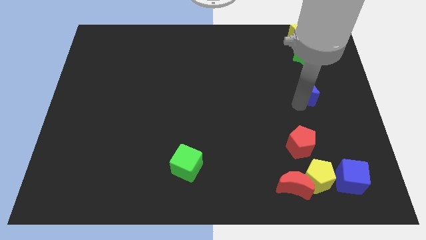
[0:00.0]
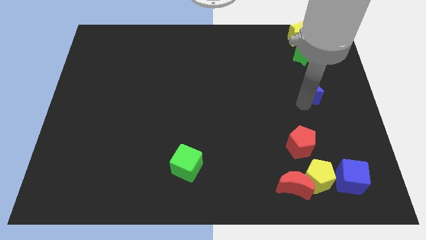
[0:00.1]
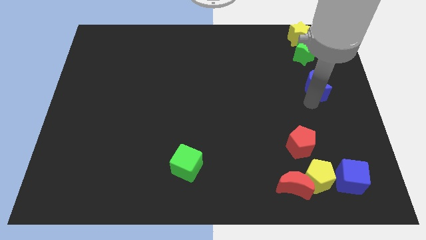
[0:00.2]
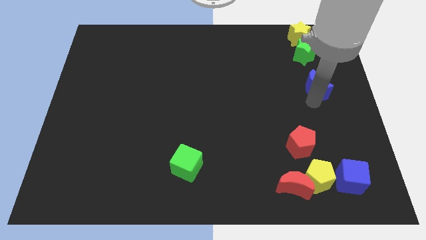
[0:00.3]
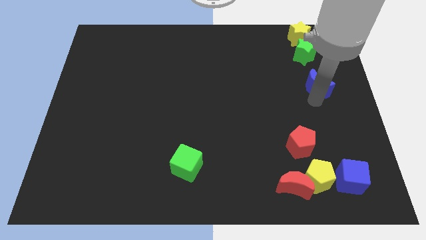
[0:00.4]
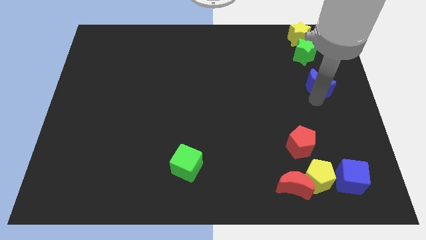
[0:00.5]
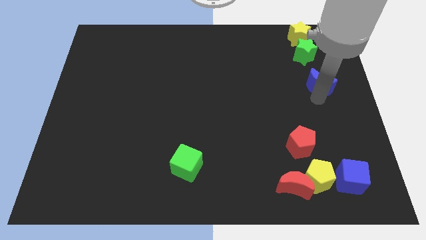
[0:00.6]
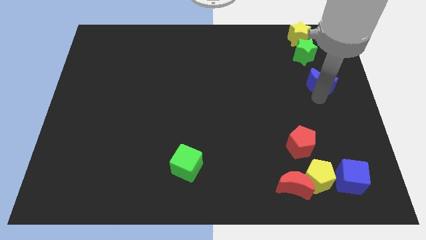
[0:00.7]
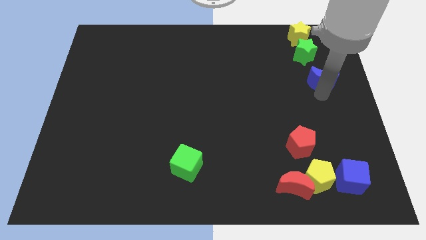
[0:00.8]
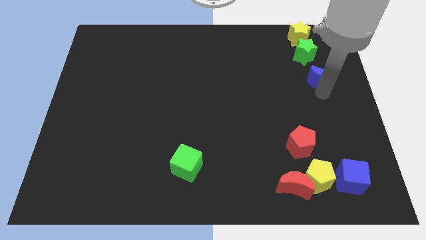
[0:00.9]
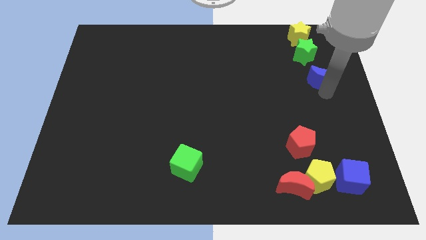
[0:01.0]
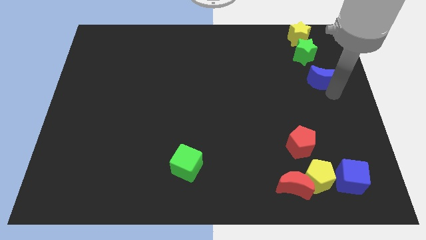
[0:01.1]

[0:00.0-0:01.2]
move blue moon on right

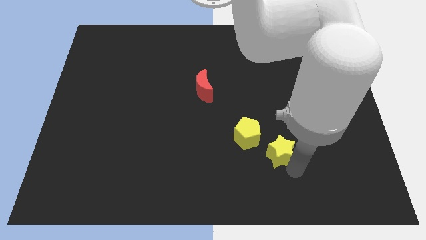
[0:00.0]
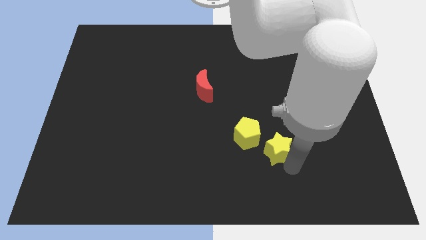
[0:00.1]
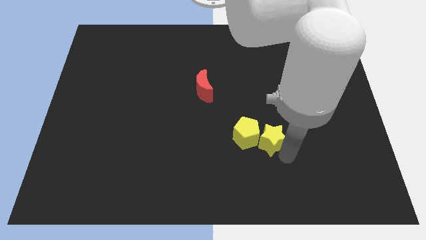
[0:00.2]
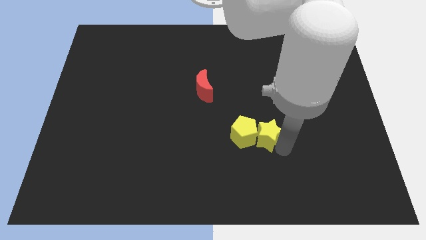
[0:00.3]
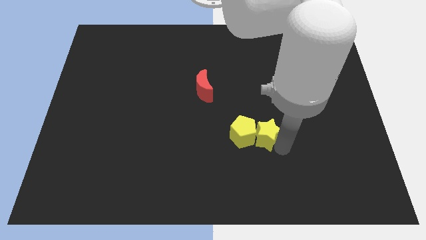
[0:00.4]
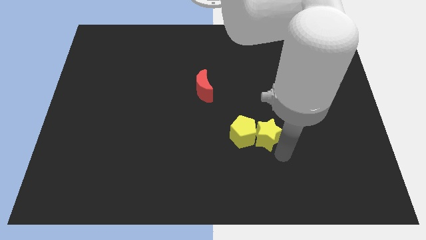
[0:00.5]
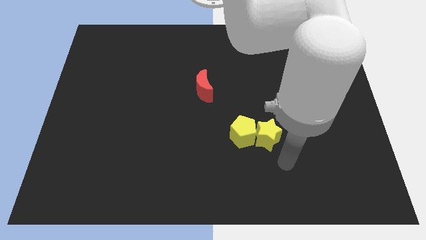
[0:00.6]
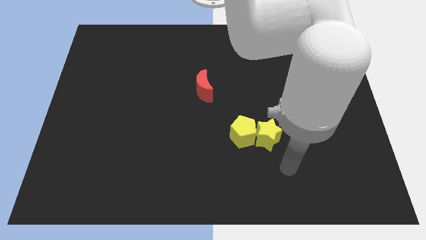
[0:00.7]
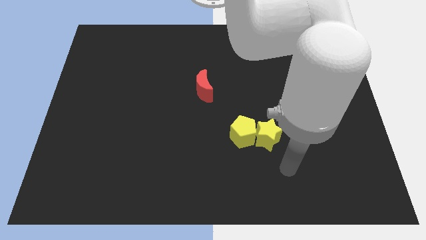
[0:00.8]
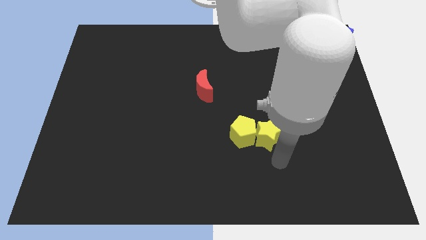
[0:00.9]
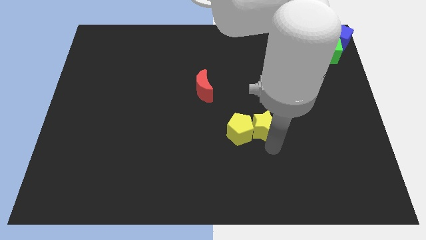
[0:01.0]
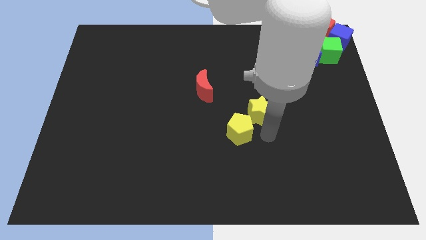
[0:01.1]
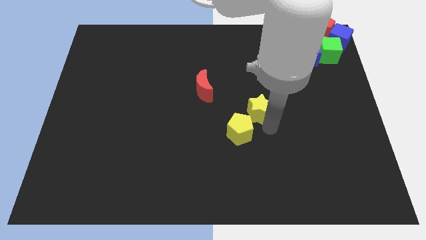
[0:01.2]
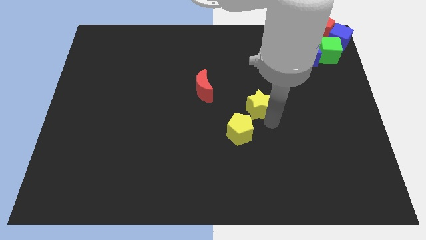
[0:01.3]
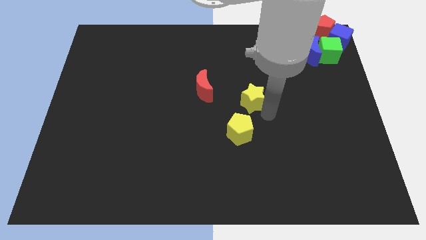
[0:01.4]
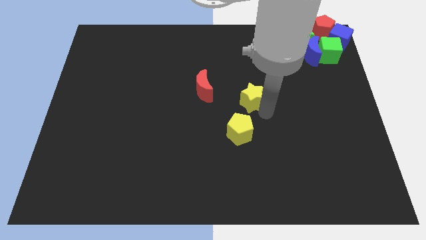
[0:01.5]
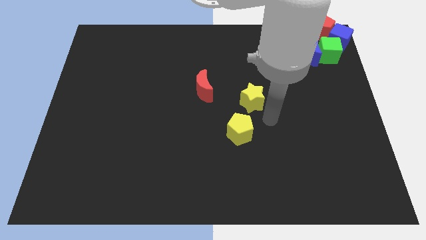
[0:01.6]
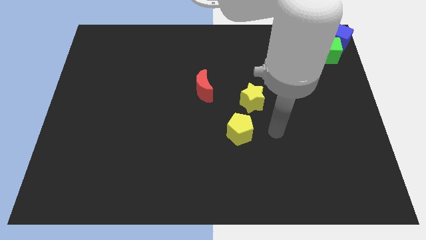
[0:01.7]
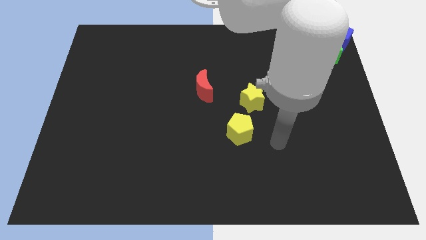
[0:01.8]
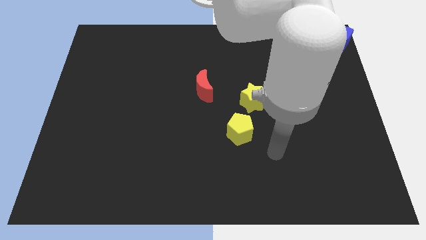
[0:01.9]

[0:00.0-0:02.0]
push the yellow star slightly upwards

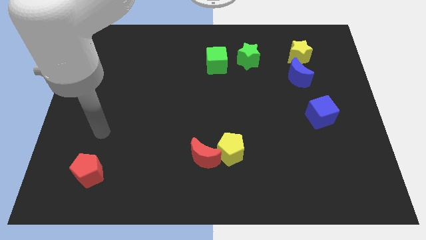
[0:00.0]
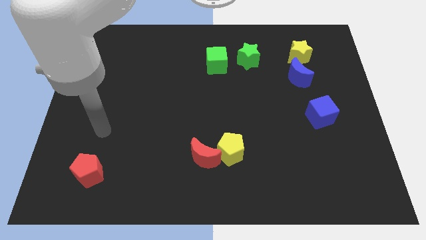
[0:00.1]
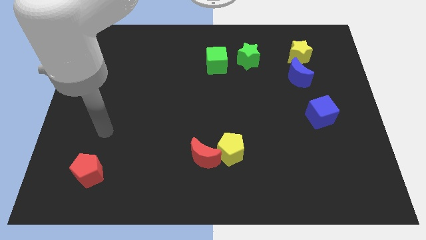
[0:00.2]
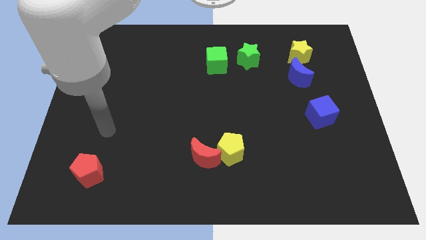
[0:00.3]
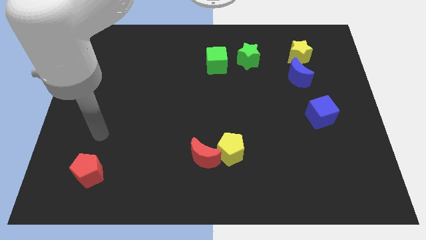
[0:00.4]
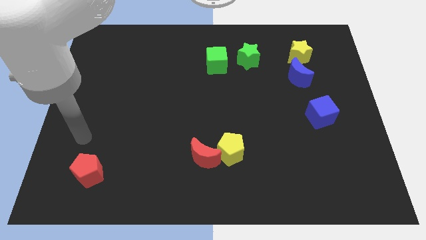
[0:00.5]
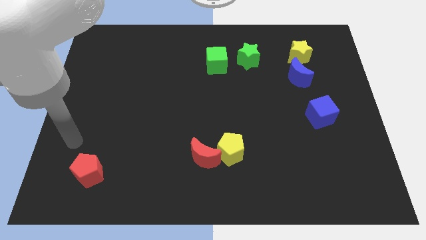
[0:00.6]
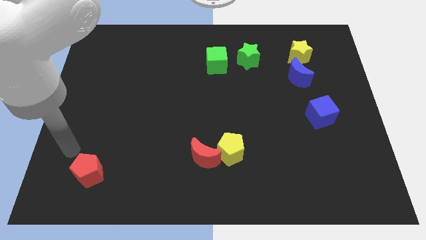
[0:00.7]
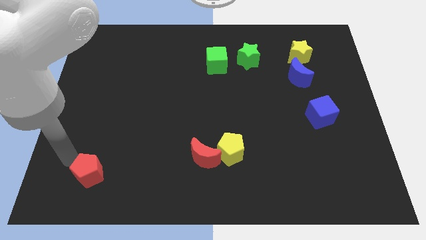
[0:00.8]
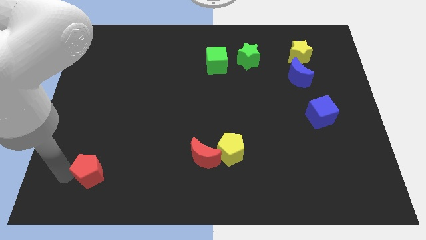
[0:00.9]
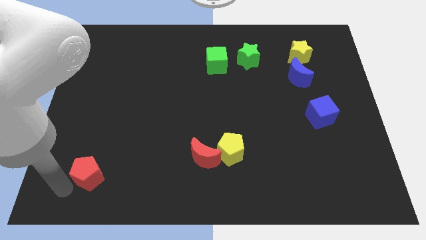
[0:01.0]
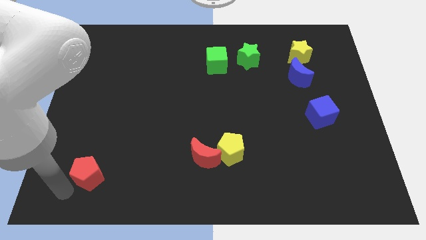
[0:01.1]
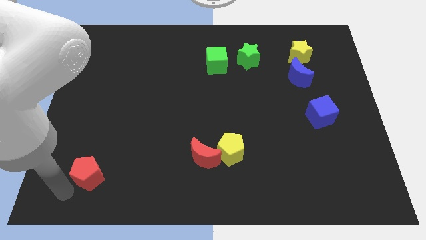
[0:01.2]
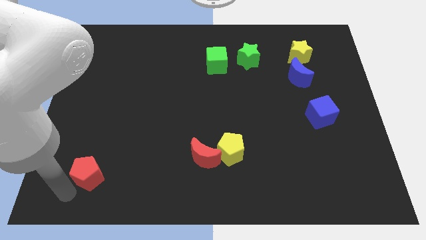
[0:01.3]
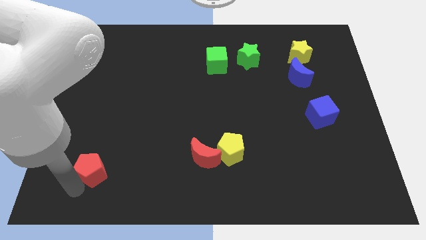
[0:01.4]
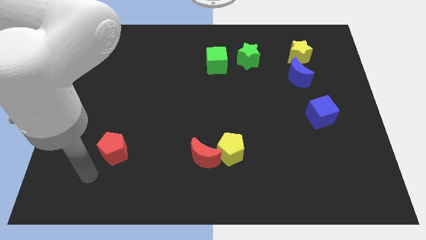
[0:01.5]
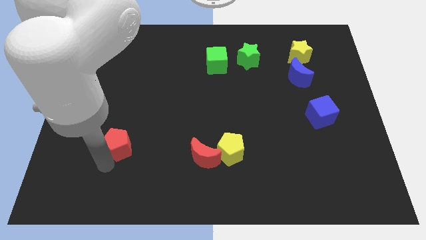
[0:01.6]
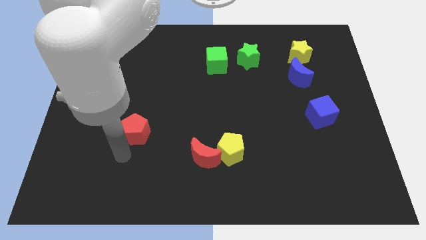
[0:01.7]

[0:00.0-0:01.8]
move red pentagon slightly upwards

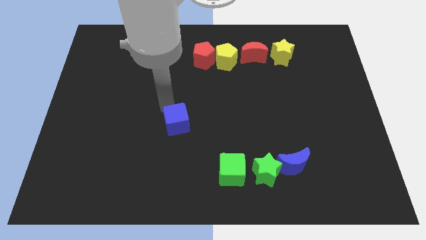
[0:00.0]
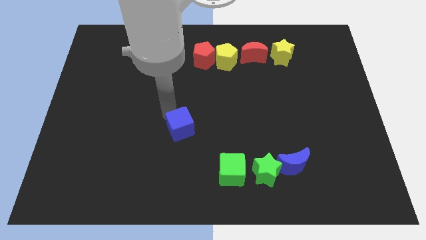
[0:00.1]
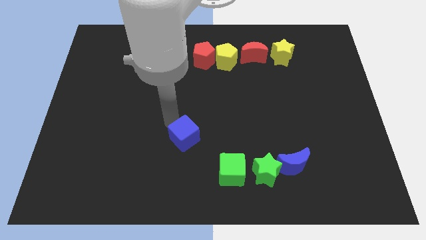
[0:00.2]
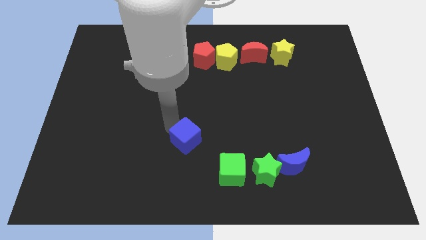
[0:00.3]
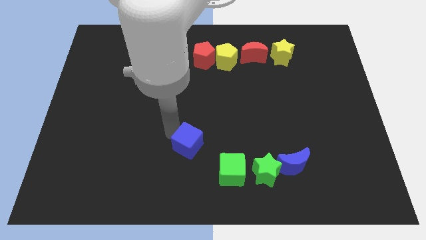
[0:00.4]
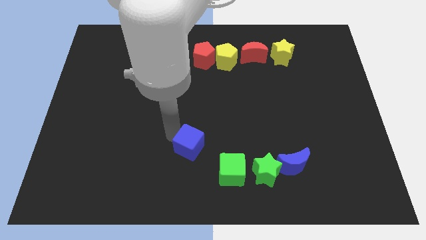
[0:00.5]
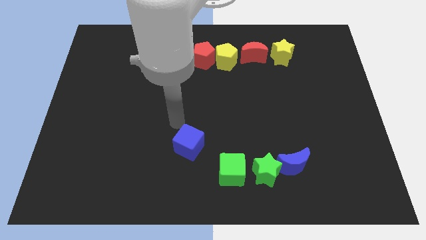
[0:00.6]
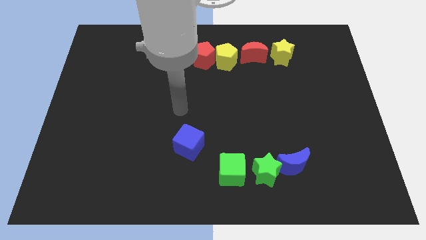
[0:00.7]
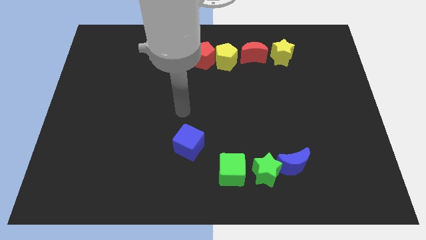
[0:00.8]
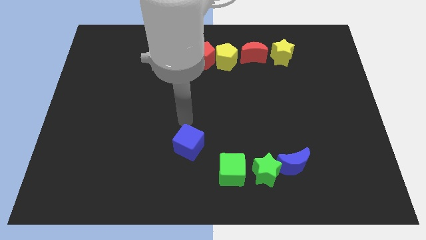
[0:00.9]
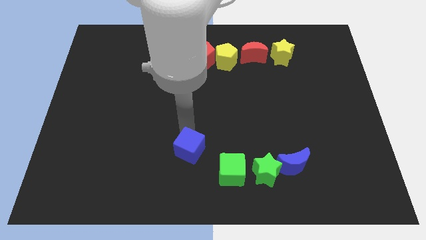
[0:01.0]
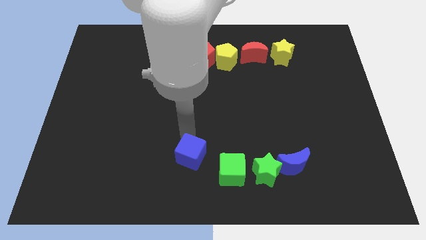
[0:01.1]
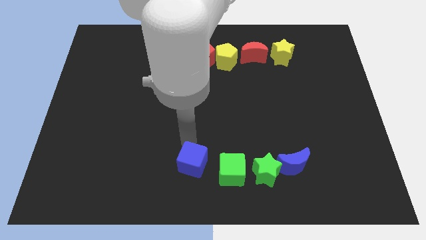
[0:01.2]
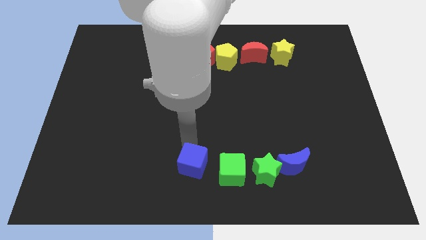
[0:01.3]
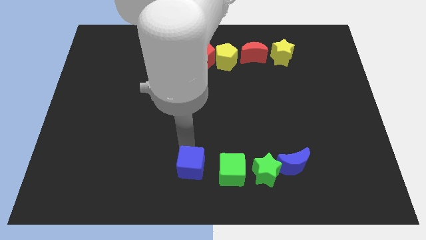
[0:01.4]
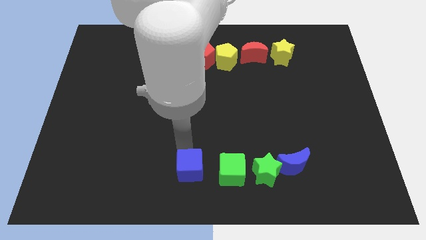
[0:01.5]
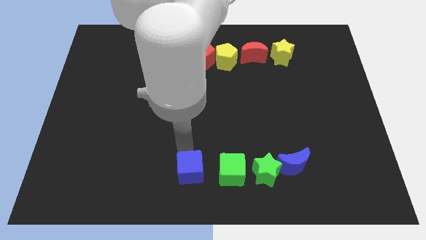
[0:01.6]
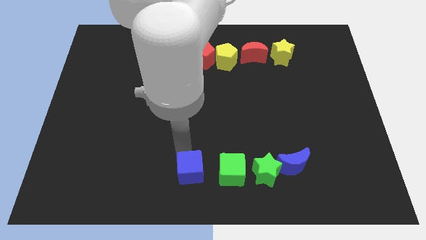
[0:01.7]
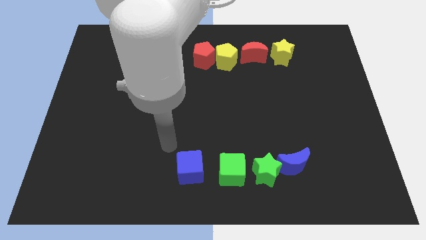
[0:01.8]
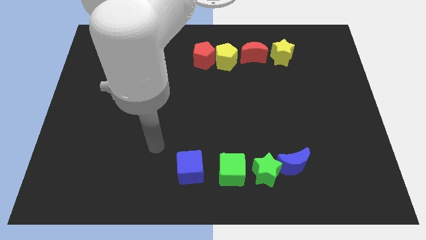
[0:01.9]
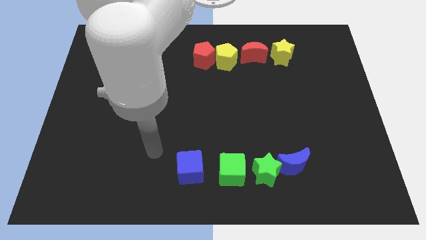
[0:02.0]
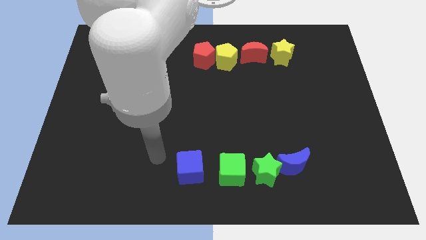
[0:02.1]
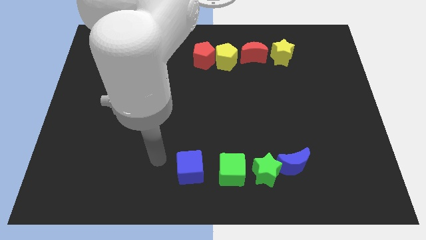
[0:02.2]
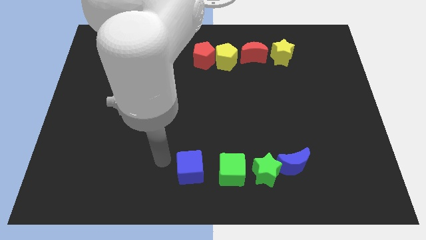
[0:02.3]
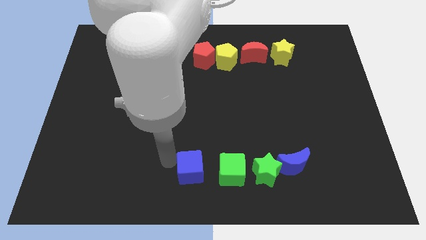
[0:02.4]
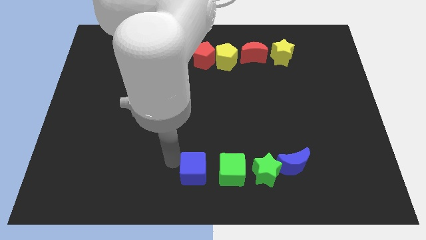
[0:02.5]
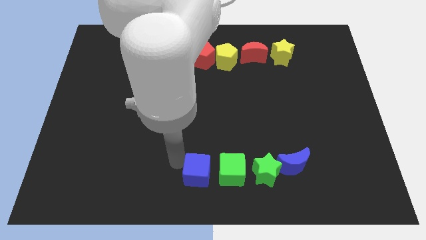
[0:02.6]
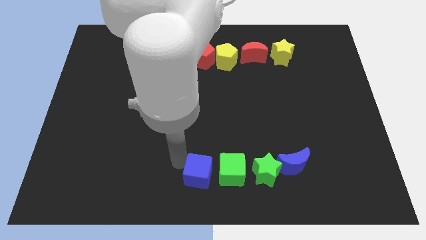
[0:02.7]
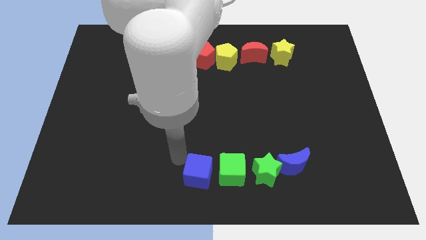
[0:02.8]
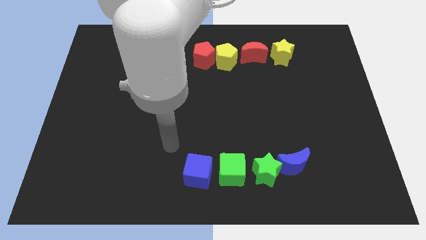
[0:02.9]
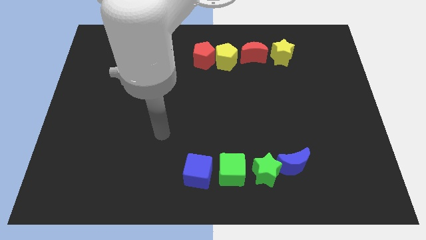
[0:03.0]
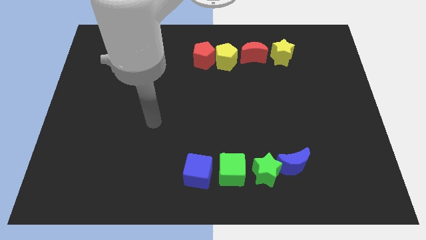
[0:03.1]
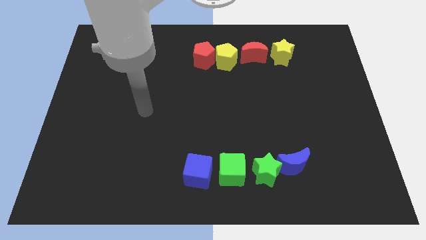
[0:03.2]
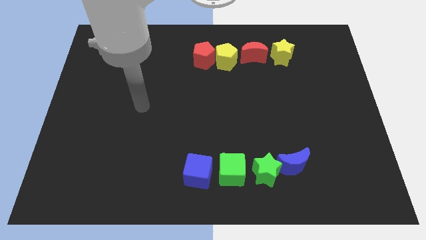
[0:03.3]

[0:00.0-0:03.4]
place the blue cube left to the green cube

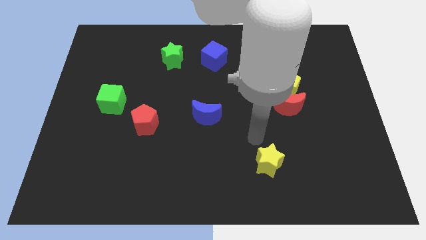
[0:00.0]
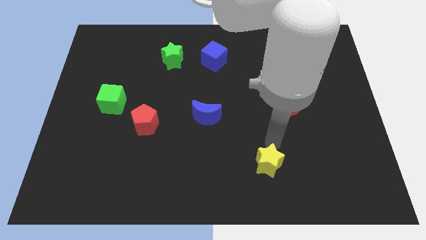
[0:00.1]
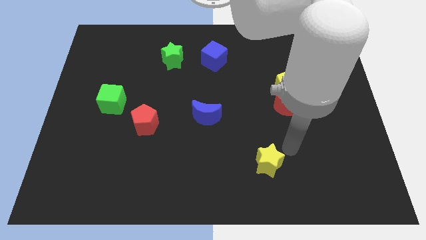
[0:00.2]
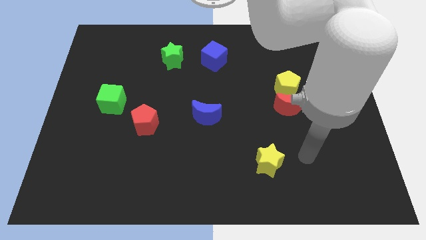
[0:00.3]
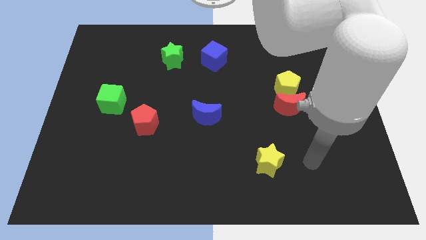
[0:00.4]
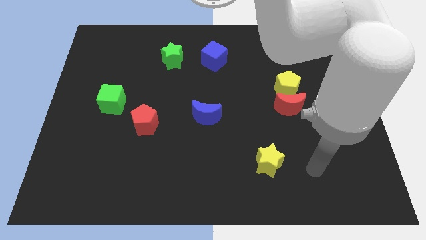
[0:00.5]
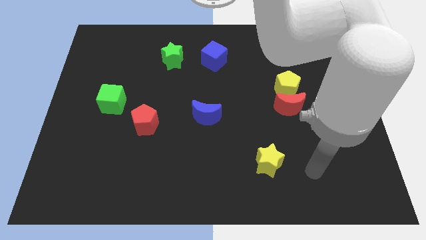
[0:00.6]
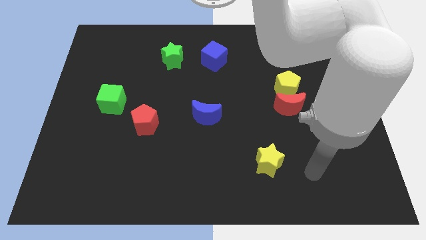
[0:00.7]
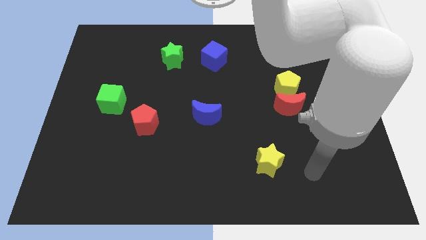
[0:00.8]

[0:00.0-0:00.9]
move your arm at the right side of the yellow star
